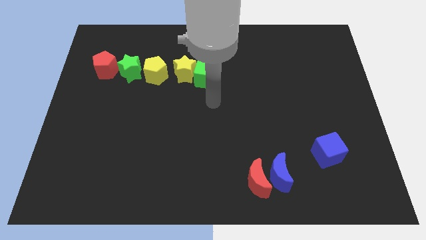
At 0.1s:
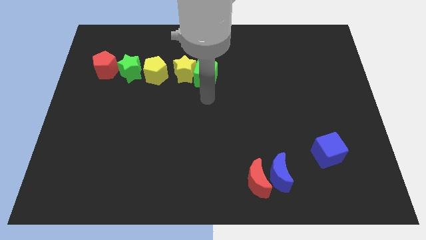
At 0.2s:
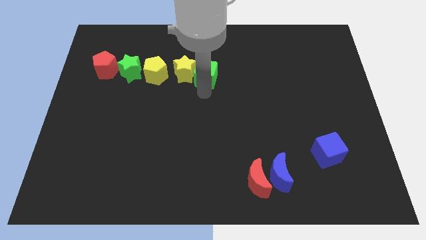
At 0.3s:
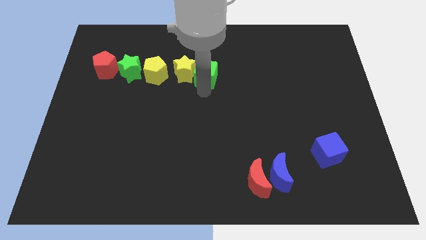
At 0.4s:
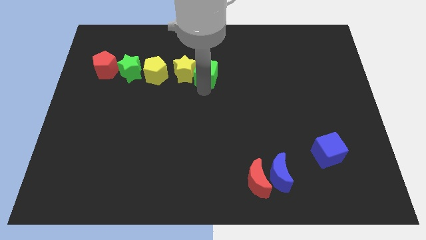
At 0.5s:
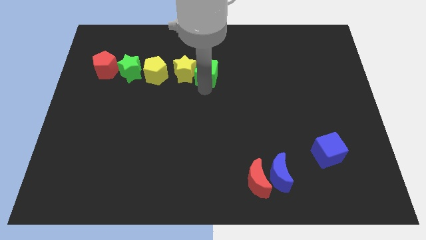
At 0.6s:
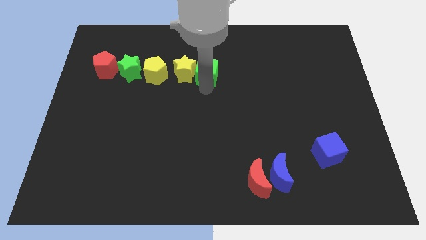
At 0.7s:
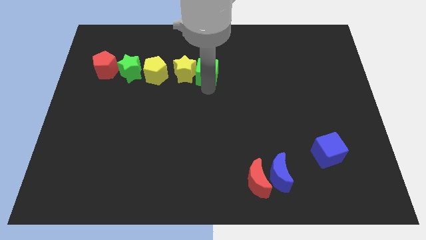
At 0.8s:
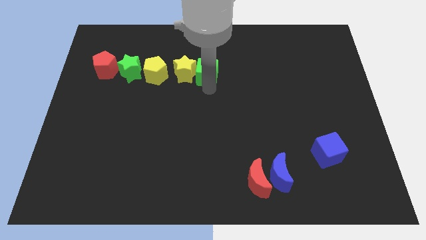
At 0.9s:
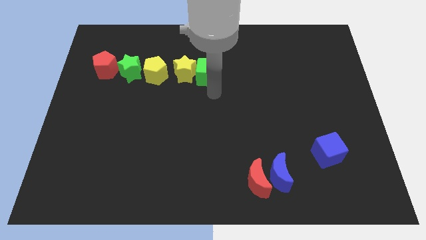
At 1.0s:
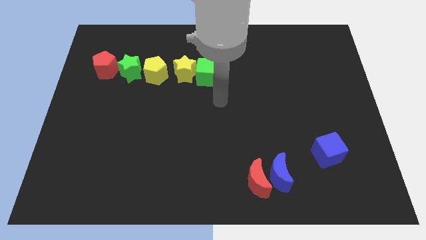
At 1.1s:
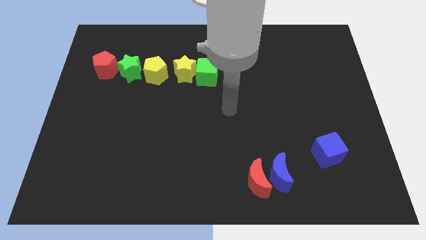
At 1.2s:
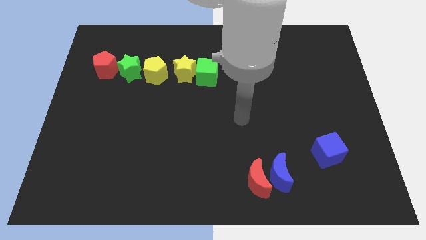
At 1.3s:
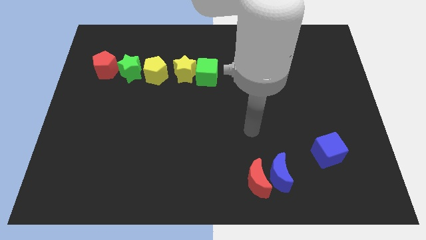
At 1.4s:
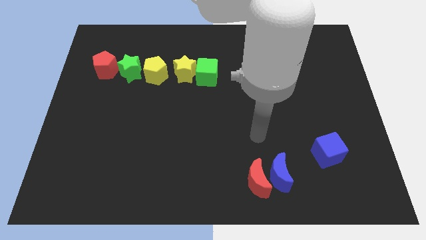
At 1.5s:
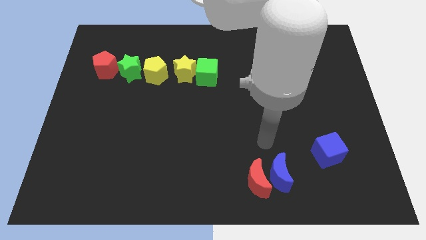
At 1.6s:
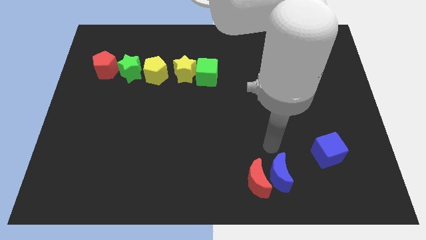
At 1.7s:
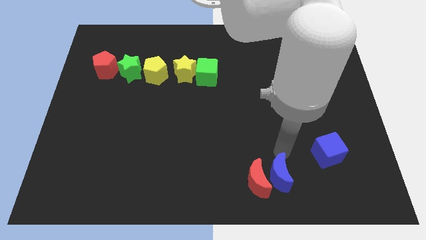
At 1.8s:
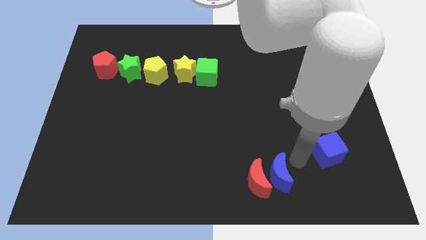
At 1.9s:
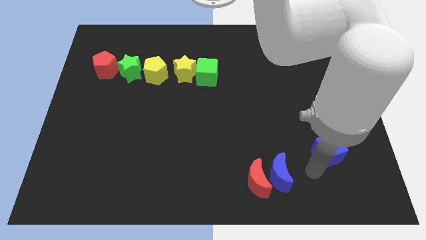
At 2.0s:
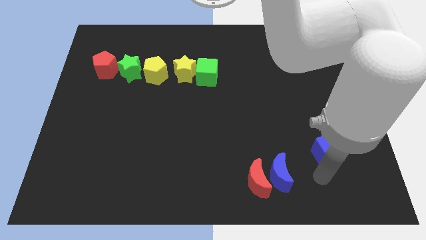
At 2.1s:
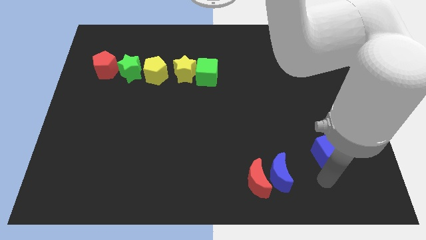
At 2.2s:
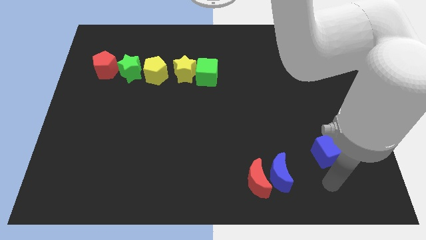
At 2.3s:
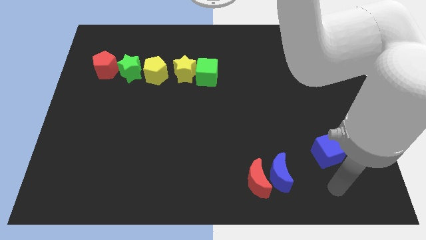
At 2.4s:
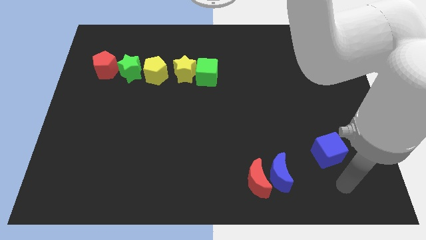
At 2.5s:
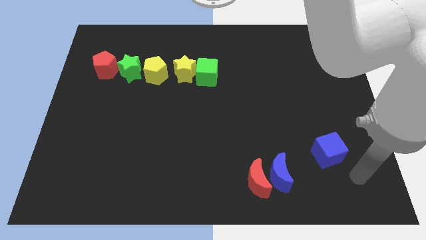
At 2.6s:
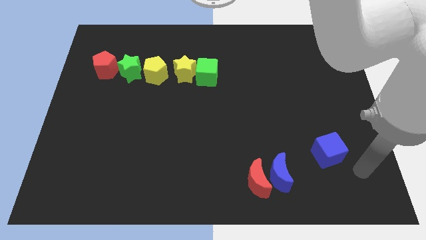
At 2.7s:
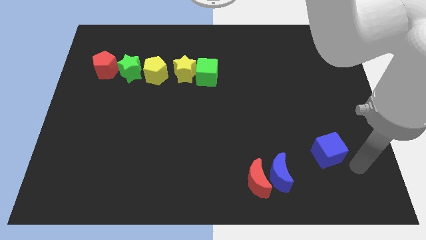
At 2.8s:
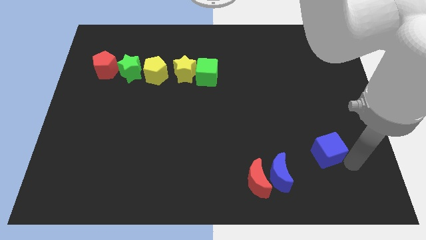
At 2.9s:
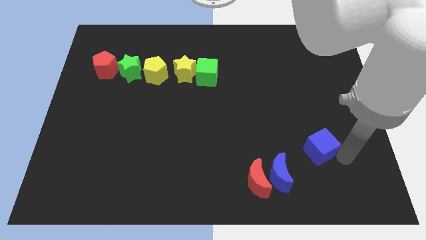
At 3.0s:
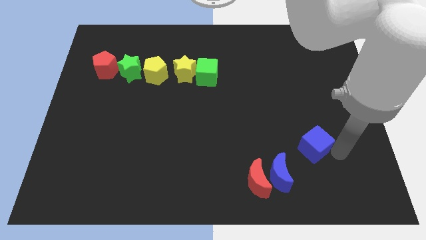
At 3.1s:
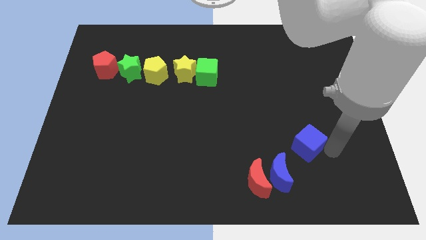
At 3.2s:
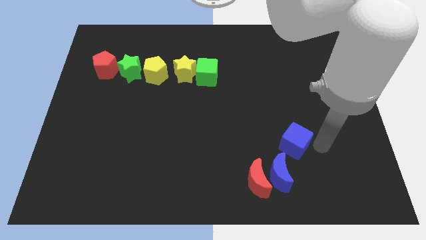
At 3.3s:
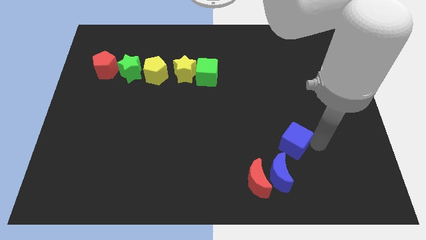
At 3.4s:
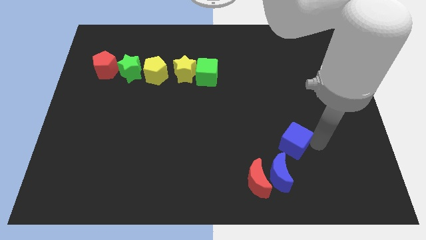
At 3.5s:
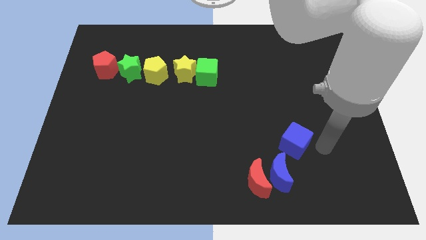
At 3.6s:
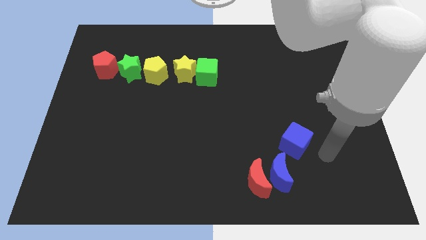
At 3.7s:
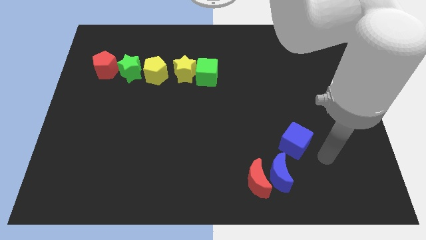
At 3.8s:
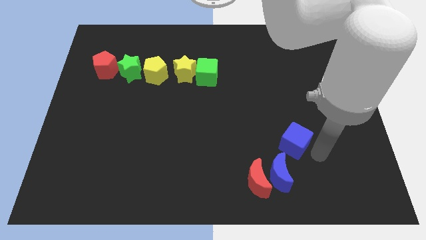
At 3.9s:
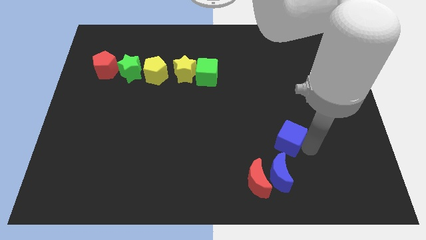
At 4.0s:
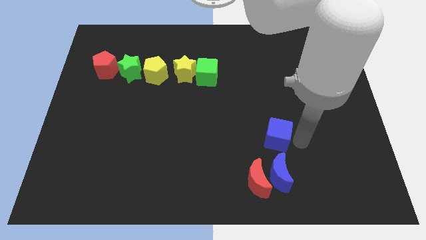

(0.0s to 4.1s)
push blue cube above blue crescent

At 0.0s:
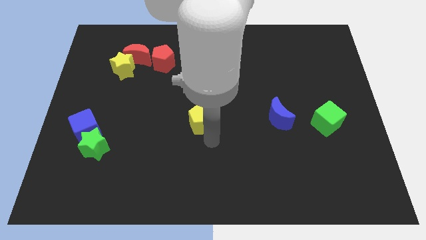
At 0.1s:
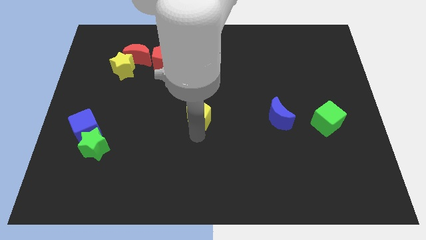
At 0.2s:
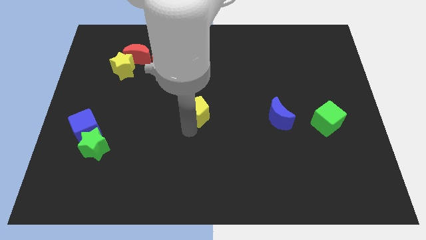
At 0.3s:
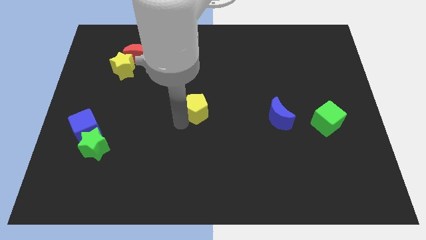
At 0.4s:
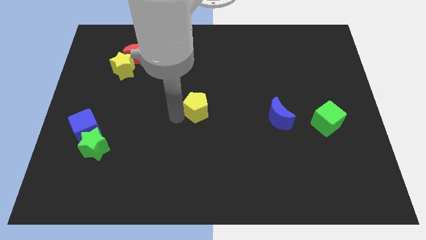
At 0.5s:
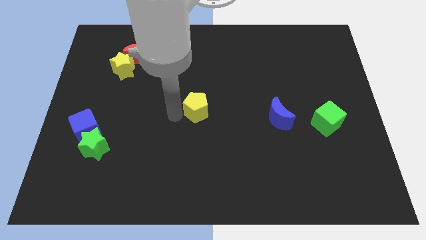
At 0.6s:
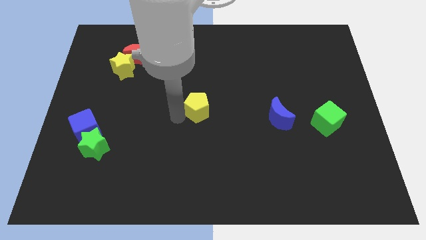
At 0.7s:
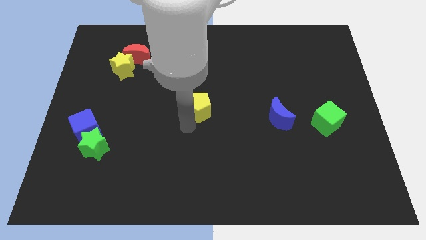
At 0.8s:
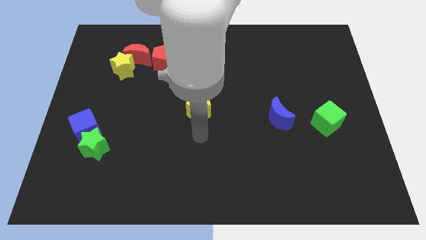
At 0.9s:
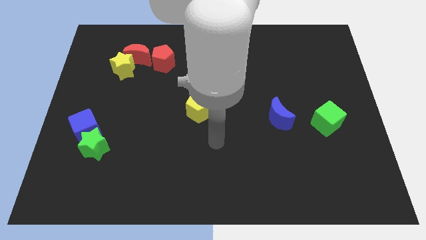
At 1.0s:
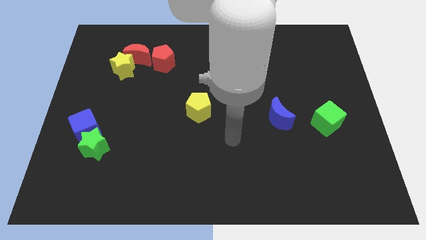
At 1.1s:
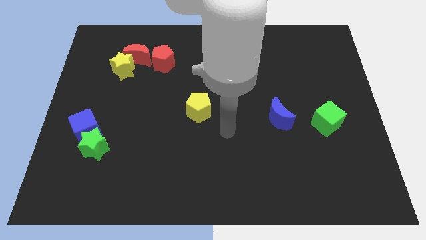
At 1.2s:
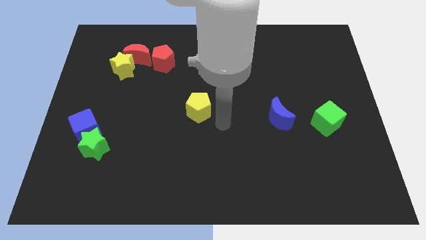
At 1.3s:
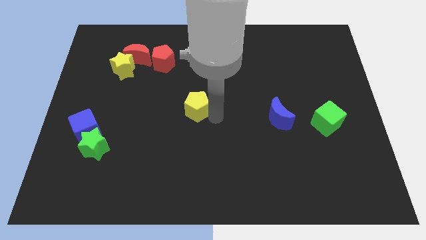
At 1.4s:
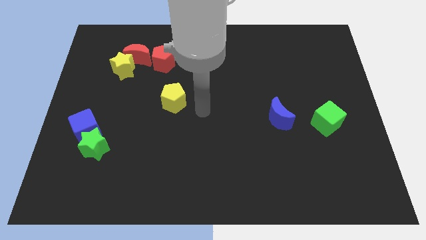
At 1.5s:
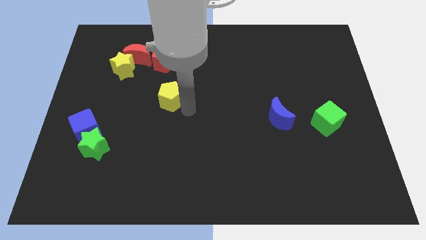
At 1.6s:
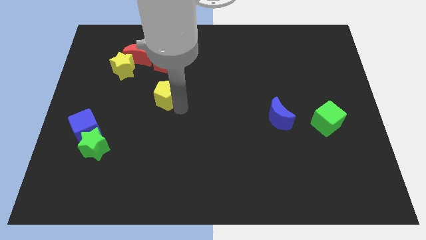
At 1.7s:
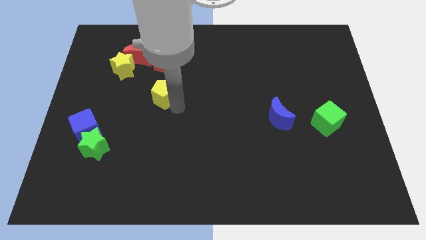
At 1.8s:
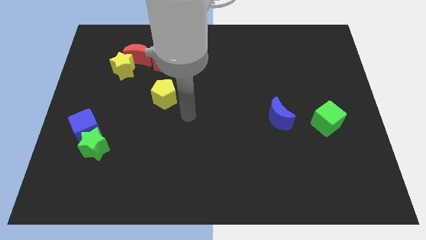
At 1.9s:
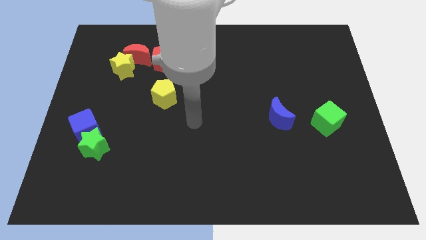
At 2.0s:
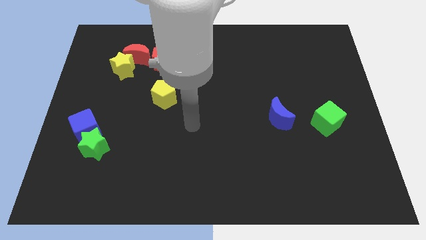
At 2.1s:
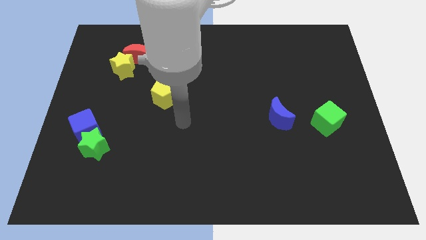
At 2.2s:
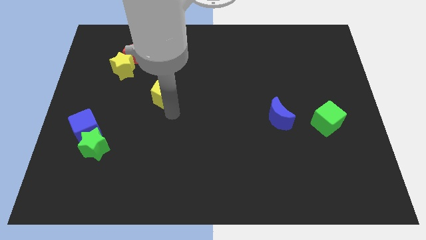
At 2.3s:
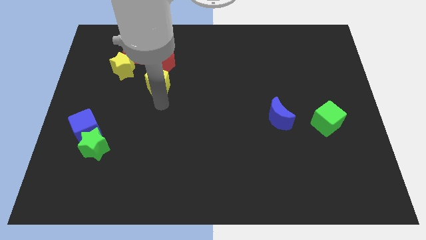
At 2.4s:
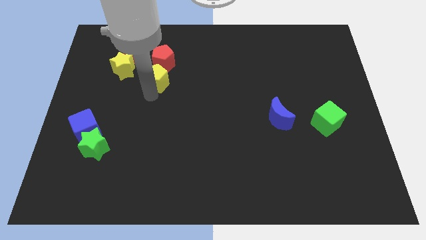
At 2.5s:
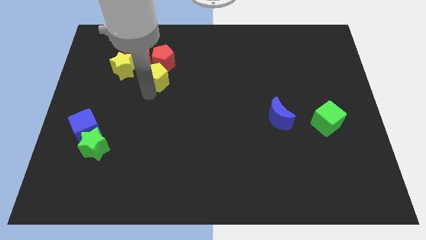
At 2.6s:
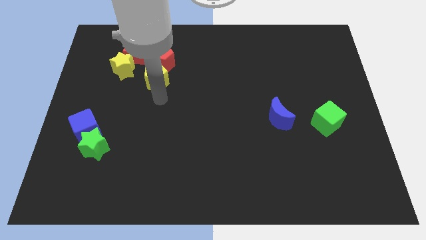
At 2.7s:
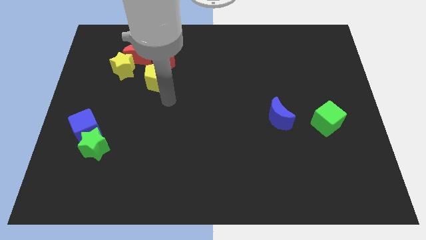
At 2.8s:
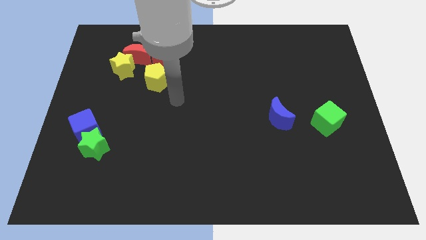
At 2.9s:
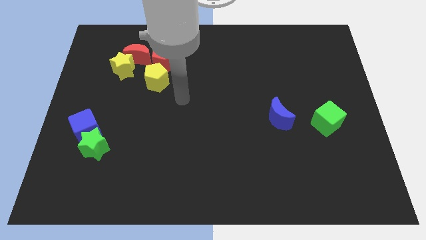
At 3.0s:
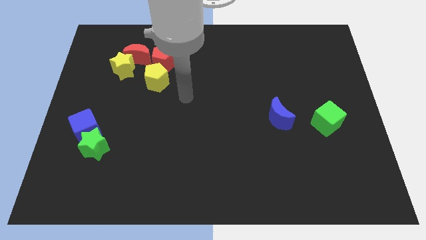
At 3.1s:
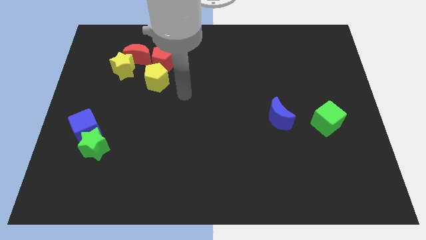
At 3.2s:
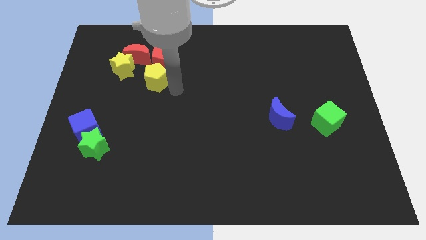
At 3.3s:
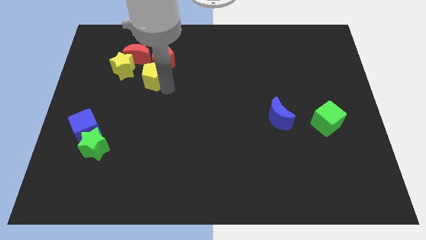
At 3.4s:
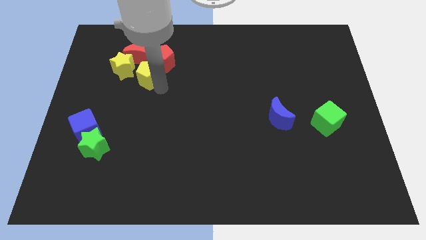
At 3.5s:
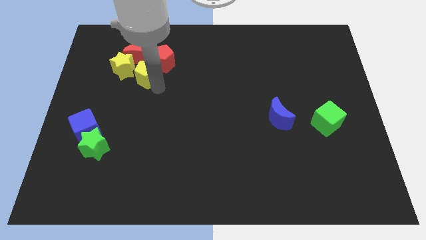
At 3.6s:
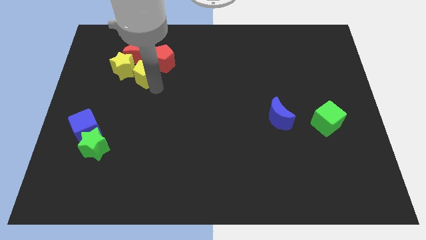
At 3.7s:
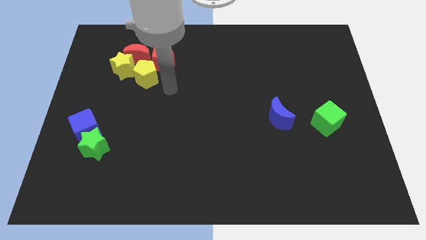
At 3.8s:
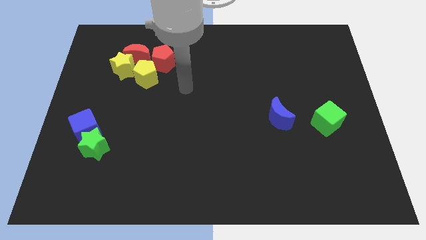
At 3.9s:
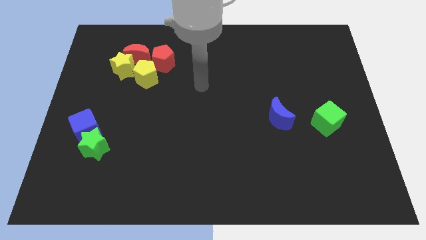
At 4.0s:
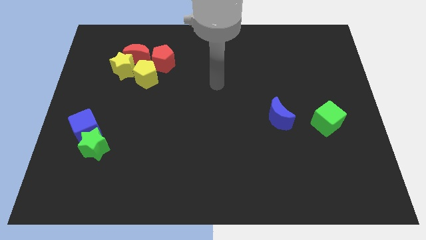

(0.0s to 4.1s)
slide yellow pentagon close to yellow star

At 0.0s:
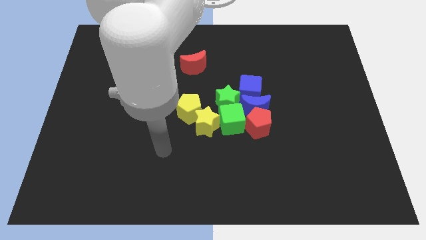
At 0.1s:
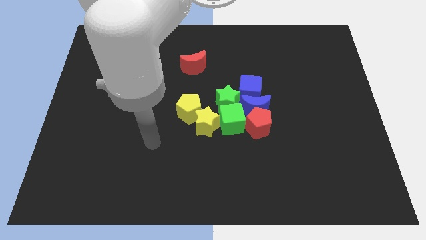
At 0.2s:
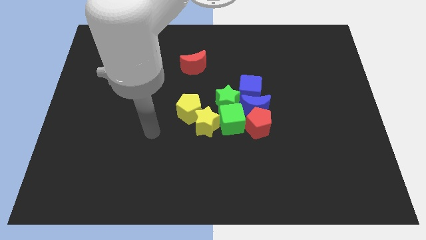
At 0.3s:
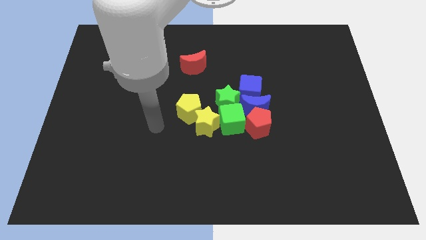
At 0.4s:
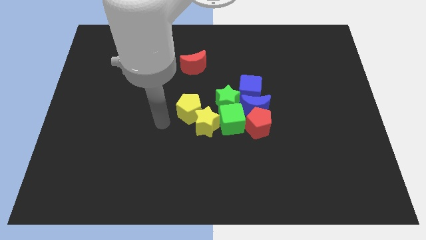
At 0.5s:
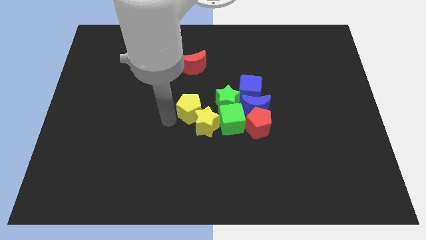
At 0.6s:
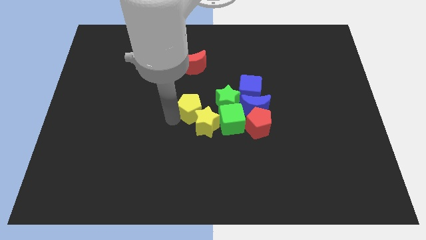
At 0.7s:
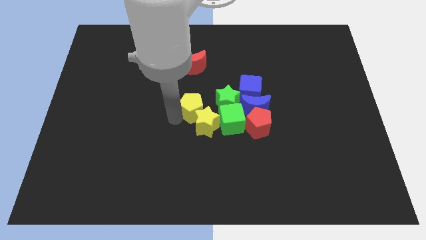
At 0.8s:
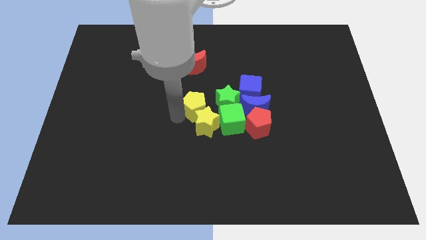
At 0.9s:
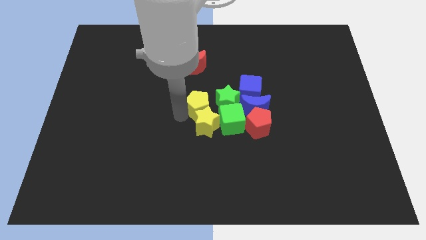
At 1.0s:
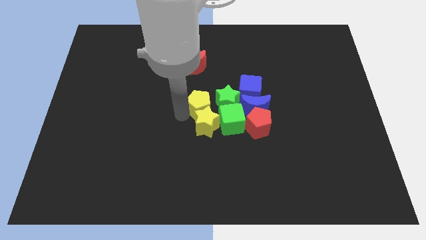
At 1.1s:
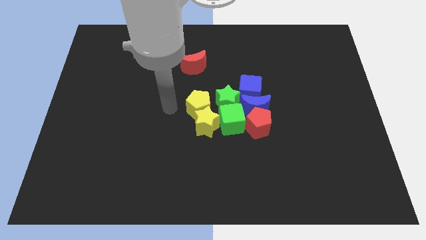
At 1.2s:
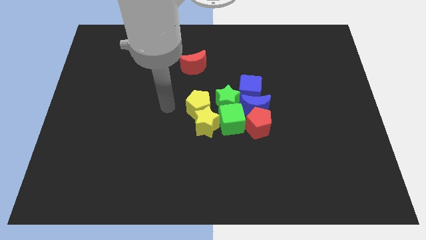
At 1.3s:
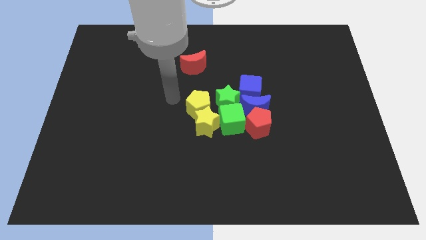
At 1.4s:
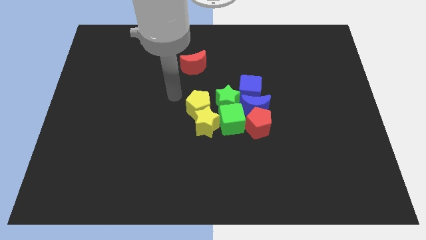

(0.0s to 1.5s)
adjust the yellow pentagon slightly to right
